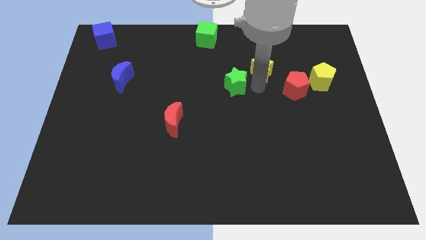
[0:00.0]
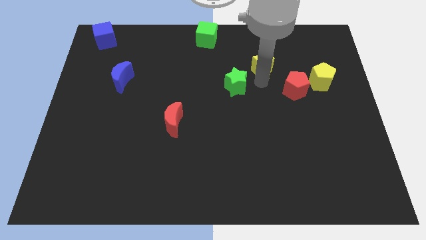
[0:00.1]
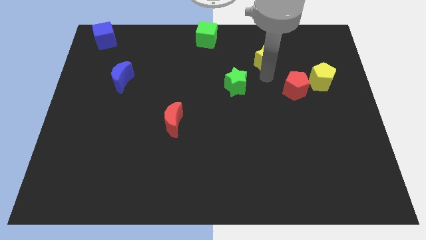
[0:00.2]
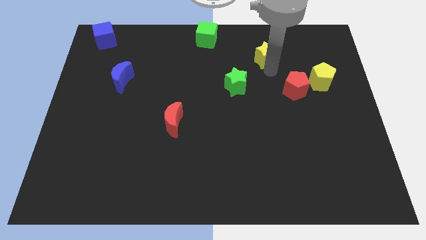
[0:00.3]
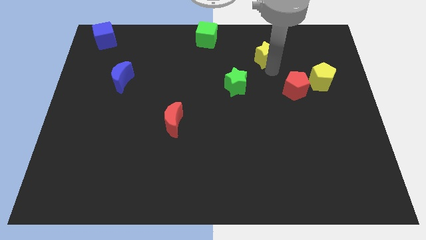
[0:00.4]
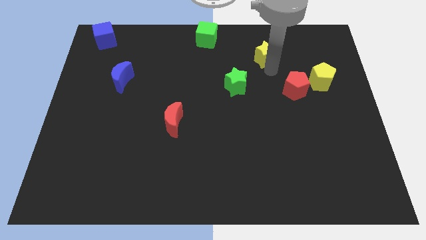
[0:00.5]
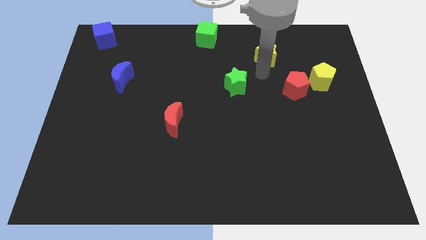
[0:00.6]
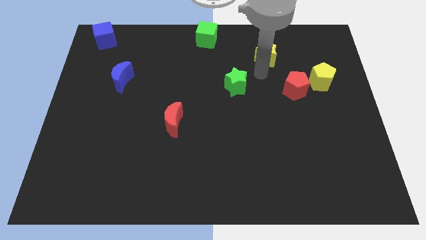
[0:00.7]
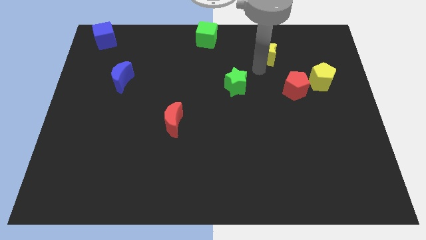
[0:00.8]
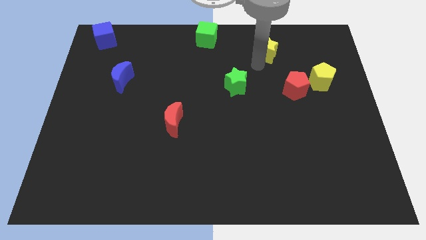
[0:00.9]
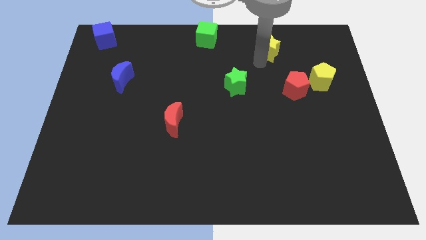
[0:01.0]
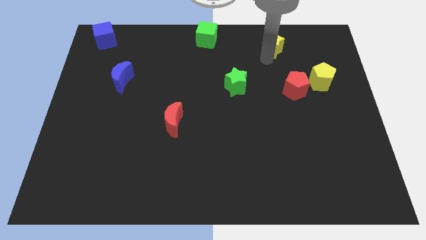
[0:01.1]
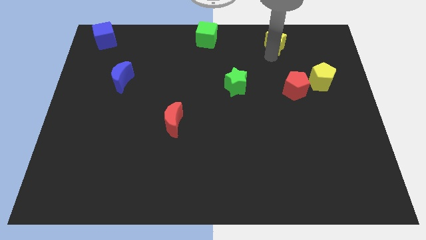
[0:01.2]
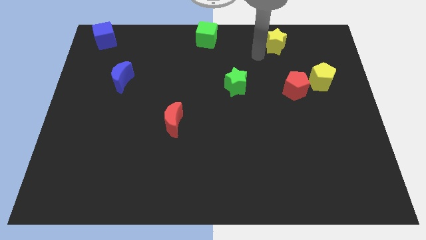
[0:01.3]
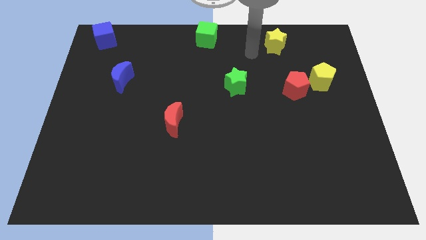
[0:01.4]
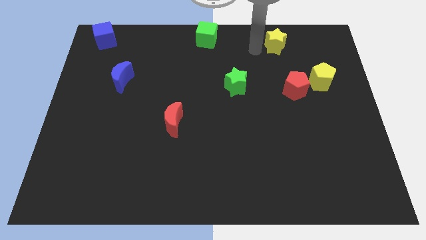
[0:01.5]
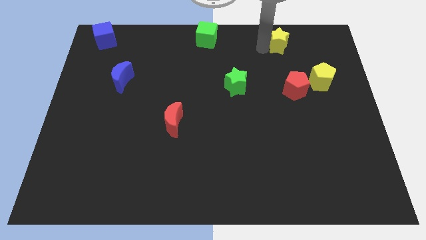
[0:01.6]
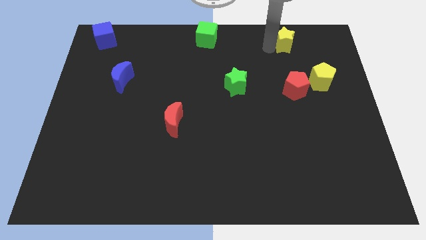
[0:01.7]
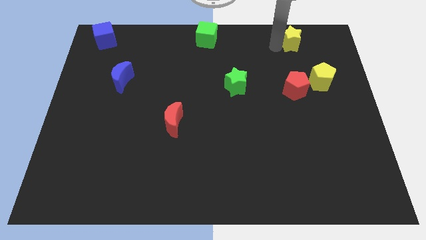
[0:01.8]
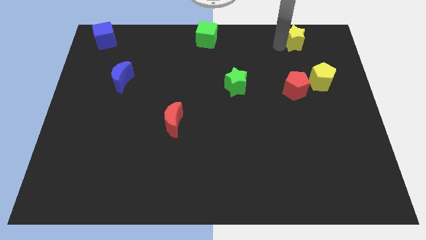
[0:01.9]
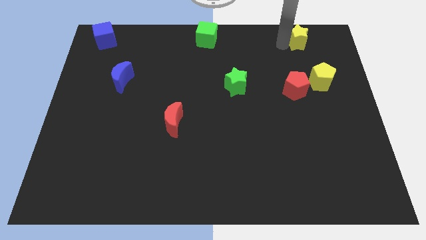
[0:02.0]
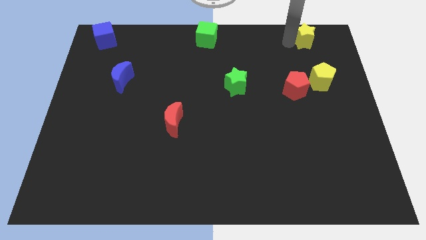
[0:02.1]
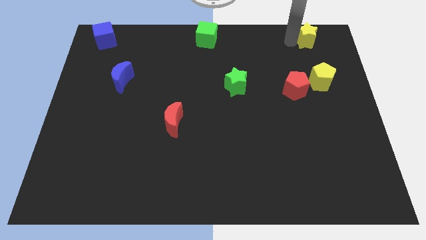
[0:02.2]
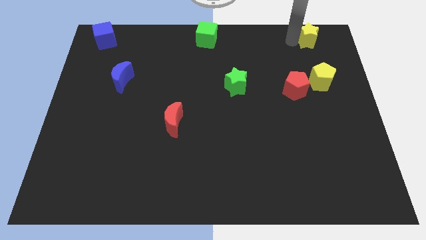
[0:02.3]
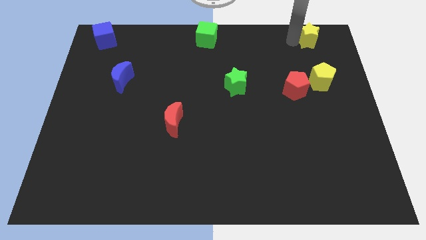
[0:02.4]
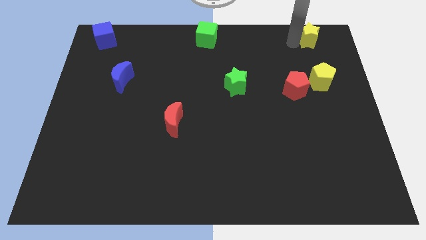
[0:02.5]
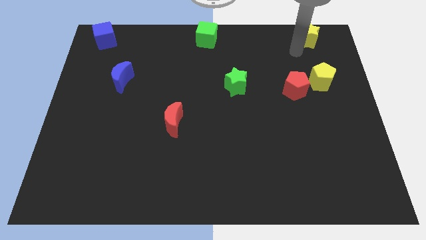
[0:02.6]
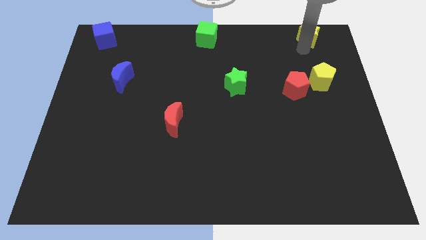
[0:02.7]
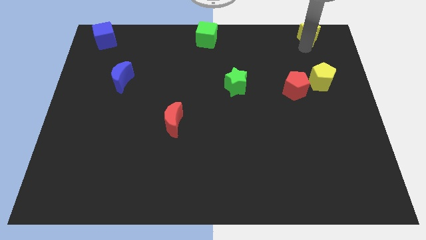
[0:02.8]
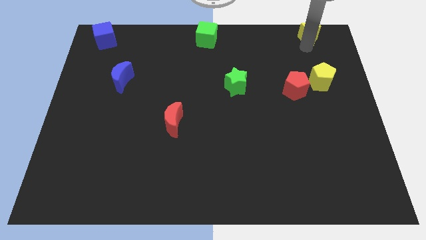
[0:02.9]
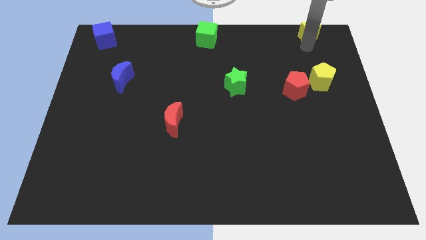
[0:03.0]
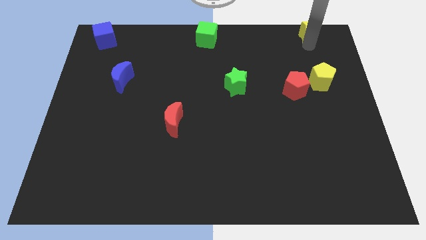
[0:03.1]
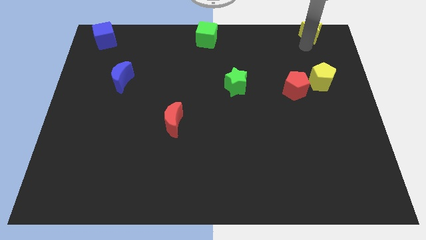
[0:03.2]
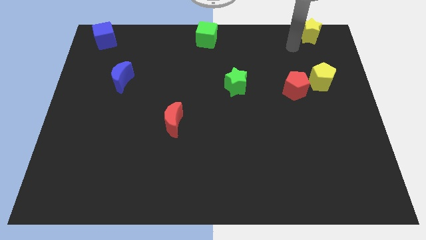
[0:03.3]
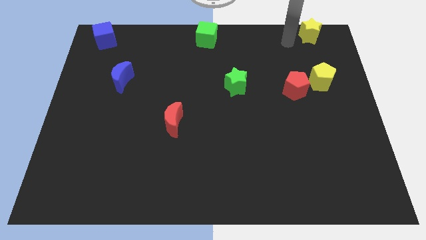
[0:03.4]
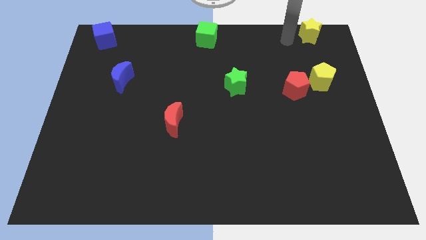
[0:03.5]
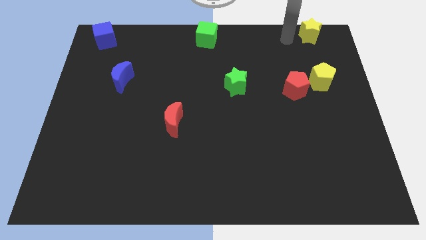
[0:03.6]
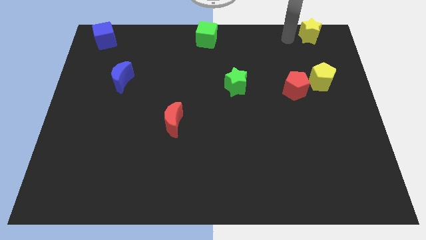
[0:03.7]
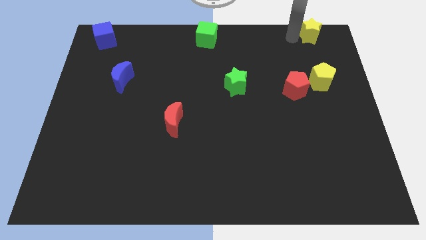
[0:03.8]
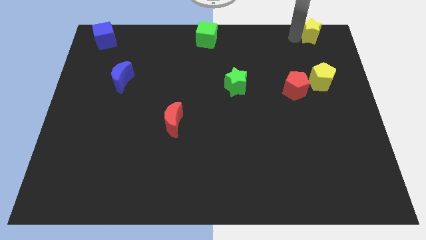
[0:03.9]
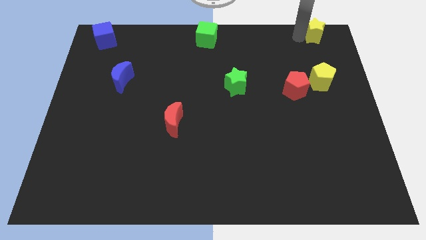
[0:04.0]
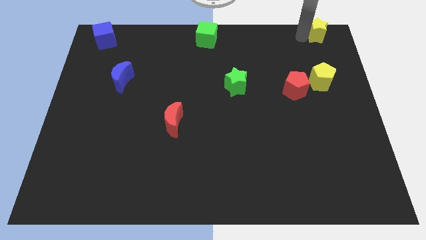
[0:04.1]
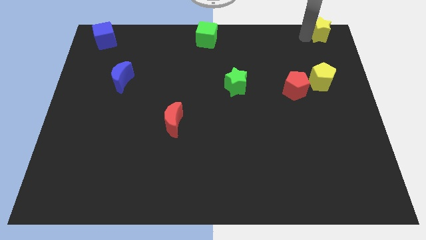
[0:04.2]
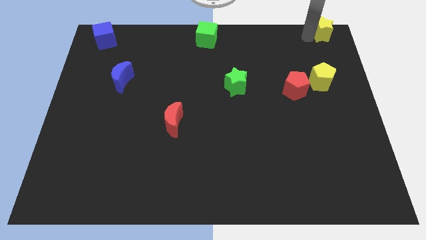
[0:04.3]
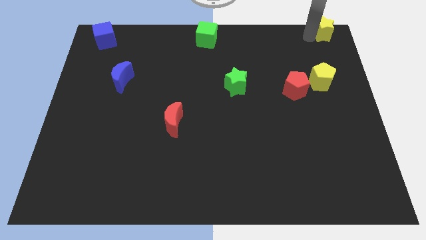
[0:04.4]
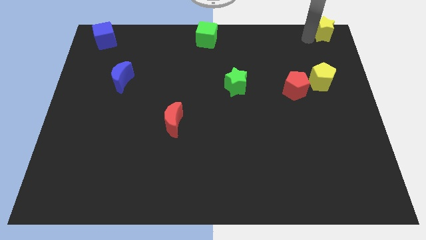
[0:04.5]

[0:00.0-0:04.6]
move the yellow star to the top right corner

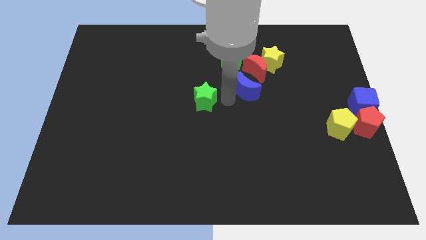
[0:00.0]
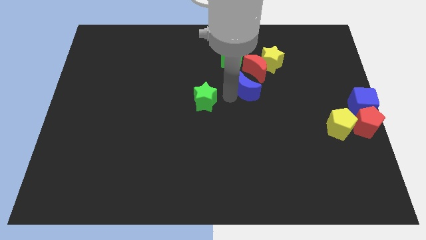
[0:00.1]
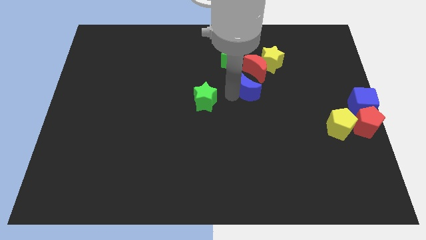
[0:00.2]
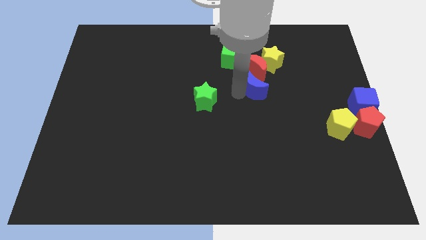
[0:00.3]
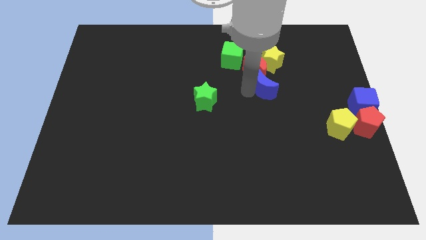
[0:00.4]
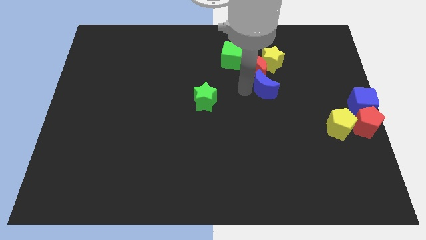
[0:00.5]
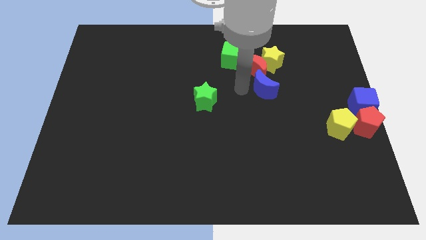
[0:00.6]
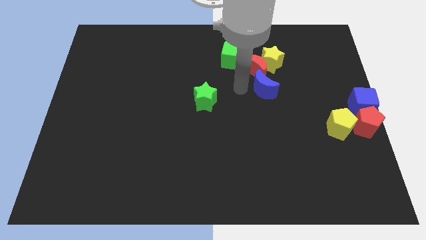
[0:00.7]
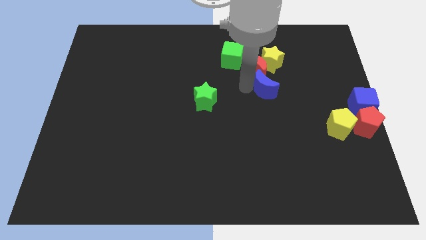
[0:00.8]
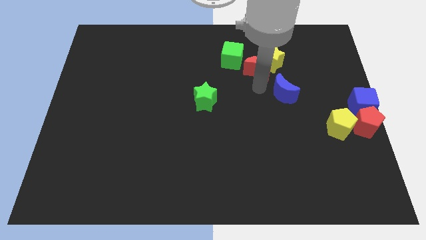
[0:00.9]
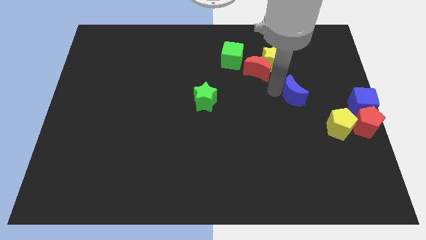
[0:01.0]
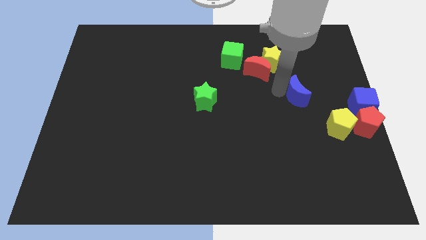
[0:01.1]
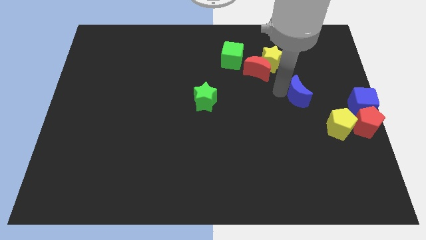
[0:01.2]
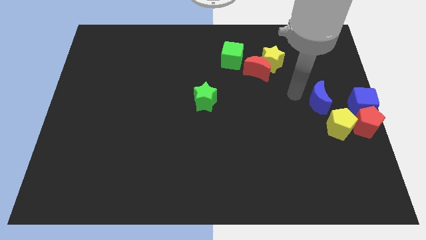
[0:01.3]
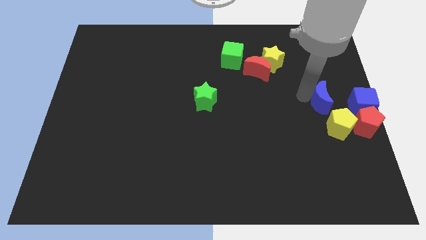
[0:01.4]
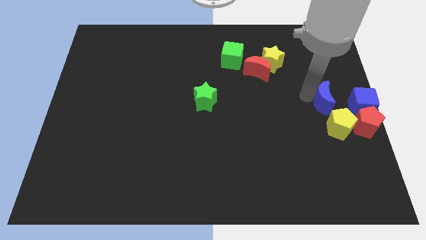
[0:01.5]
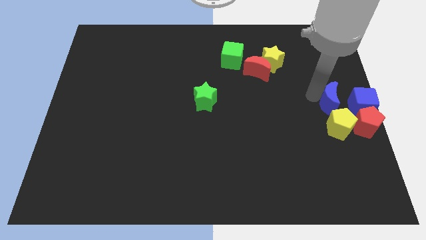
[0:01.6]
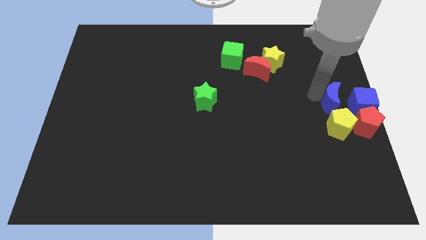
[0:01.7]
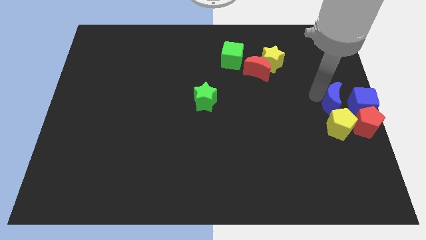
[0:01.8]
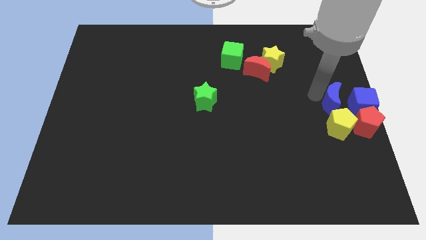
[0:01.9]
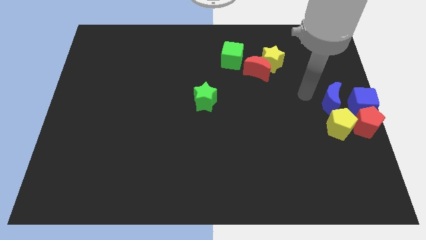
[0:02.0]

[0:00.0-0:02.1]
slide the blue crescent top of the yellow pentagon

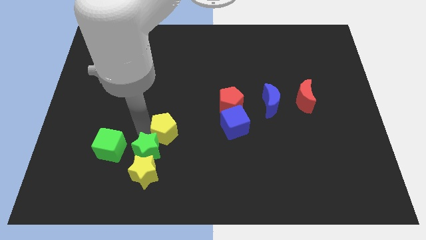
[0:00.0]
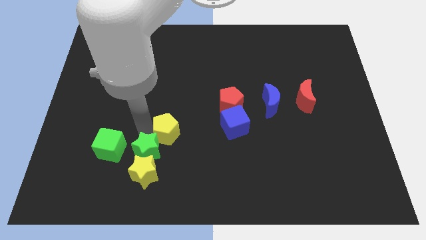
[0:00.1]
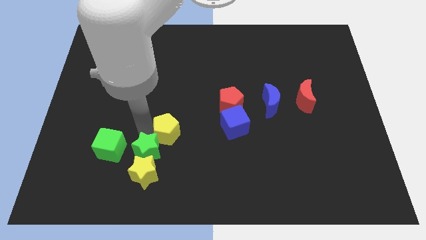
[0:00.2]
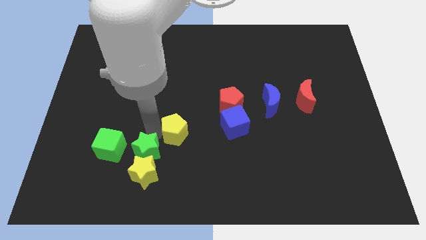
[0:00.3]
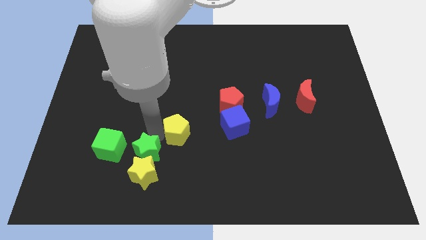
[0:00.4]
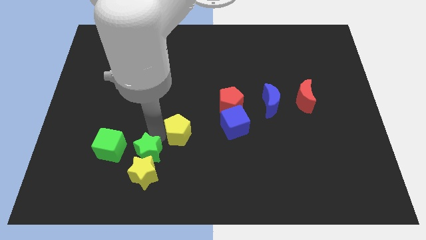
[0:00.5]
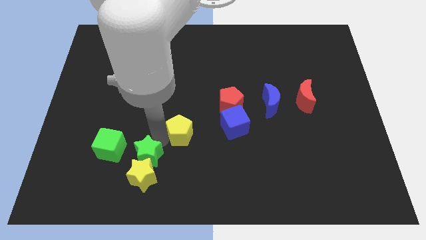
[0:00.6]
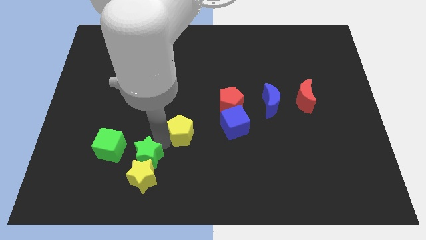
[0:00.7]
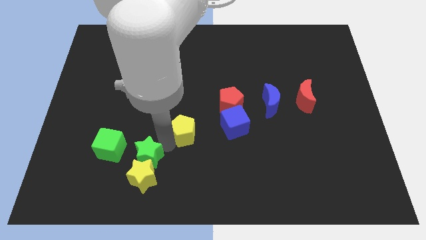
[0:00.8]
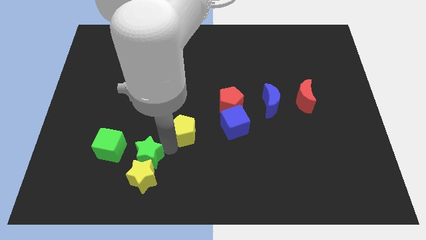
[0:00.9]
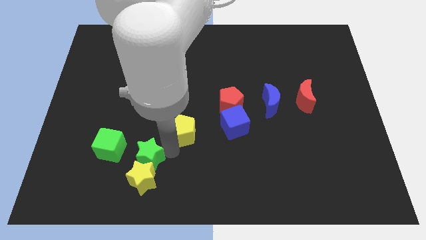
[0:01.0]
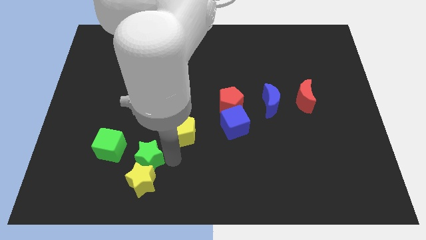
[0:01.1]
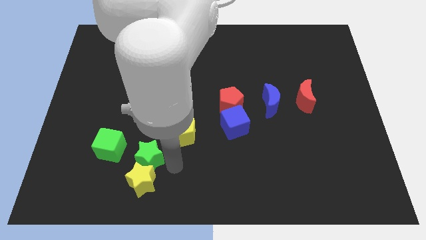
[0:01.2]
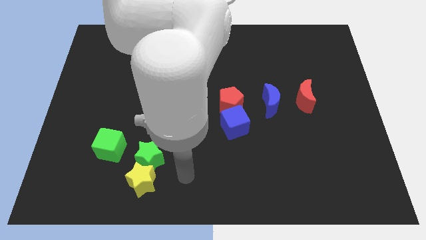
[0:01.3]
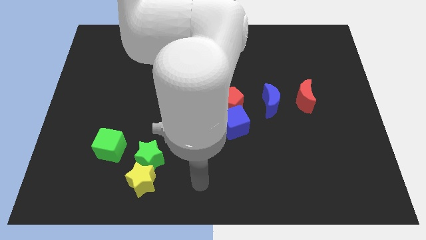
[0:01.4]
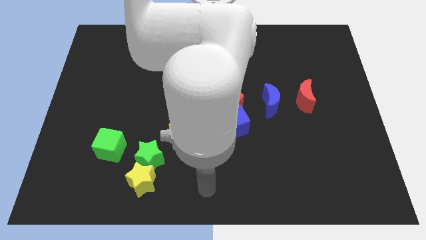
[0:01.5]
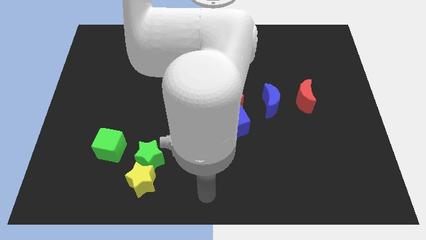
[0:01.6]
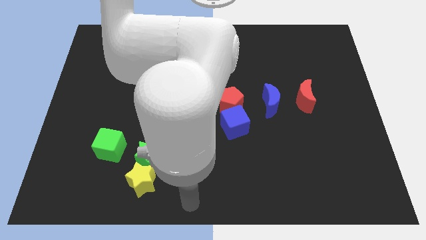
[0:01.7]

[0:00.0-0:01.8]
move the green star and the yellow pentagon away from each other

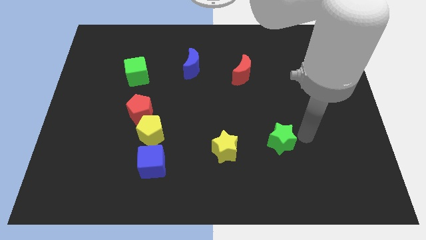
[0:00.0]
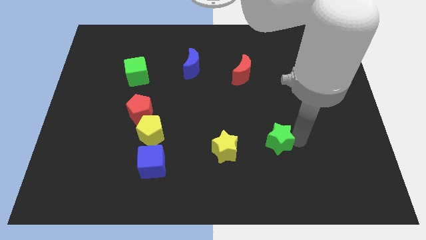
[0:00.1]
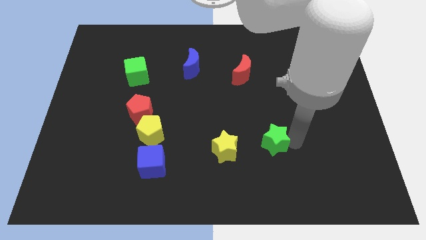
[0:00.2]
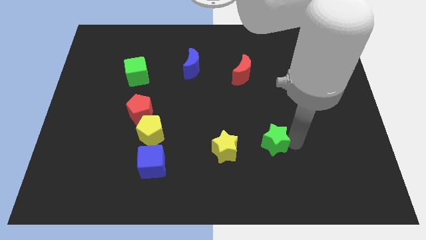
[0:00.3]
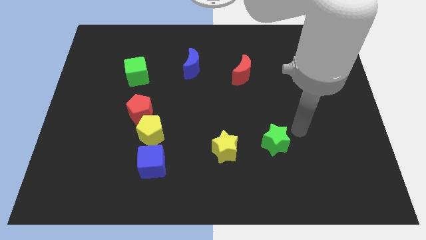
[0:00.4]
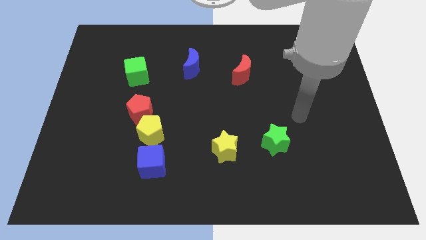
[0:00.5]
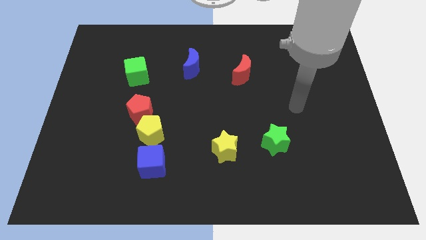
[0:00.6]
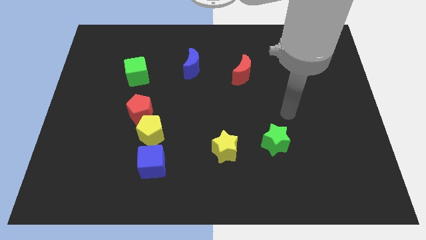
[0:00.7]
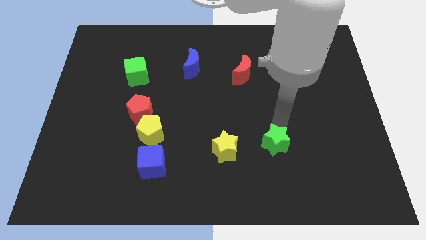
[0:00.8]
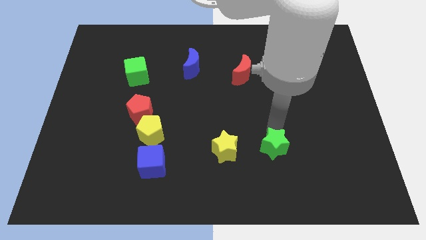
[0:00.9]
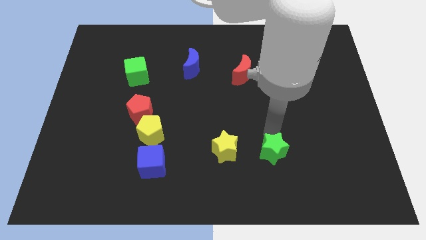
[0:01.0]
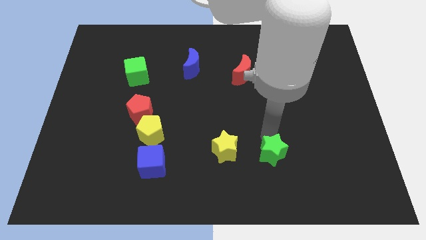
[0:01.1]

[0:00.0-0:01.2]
place the green star parallel yellow star
